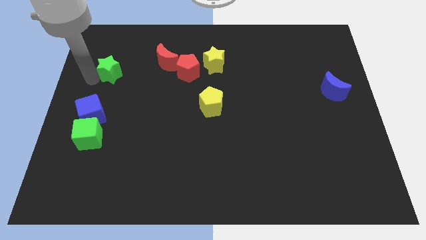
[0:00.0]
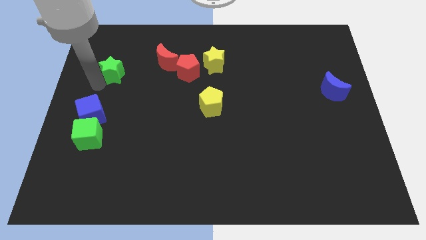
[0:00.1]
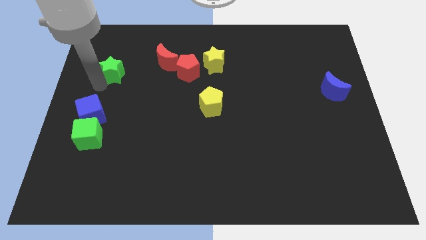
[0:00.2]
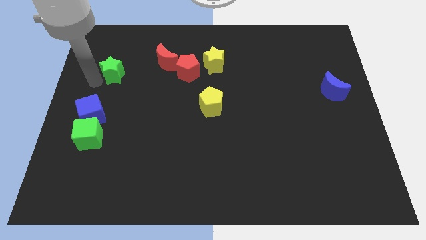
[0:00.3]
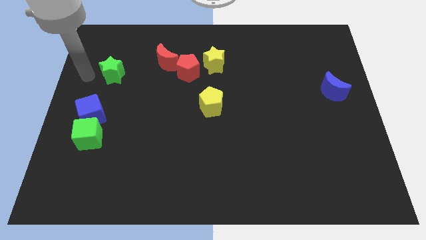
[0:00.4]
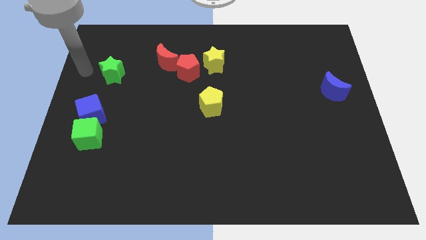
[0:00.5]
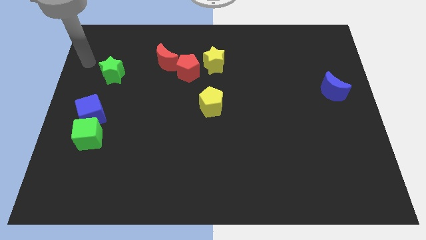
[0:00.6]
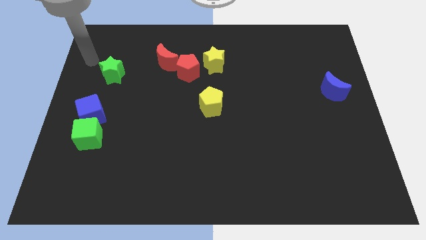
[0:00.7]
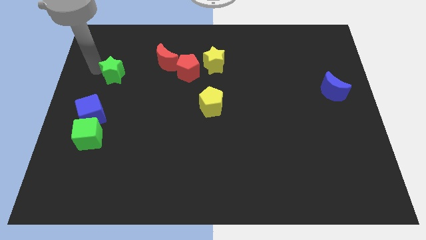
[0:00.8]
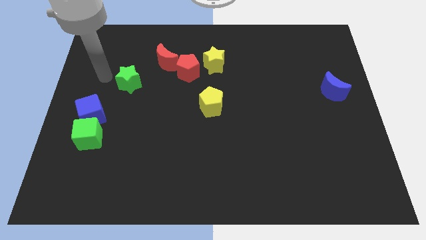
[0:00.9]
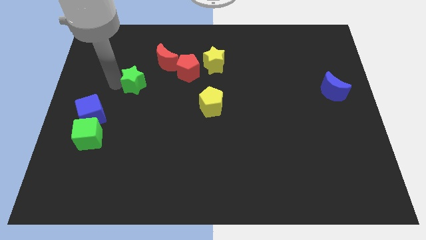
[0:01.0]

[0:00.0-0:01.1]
slide green star slightly to the right

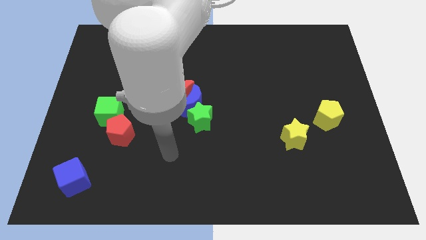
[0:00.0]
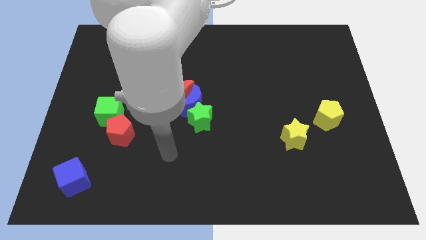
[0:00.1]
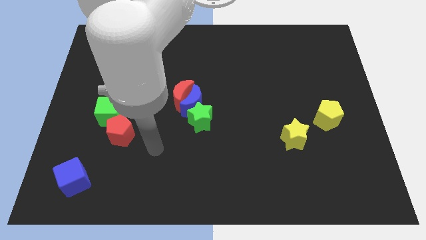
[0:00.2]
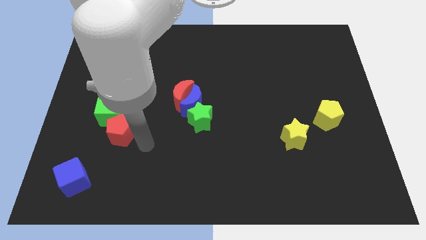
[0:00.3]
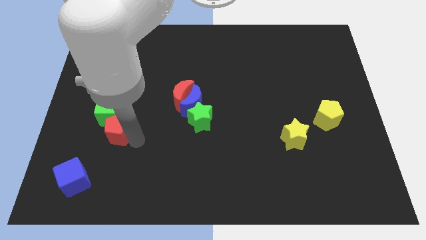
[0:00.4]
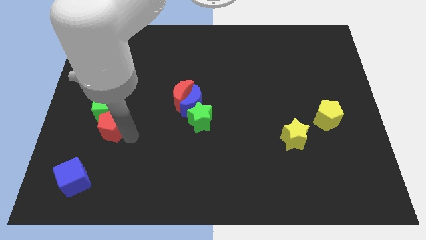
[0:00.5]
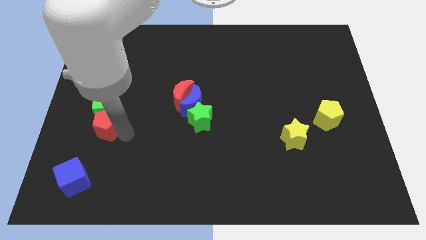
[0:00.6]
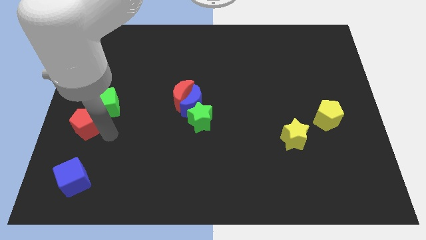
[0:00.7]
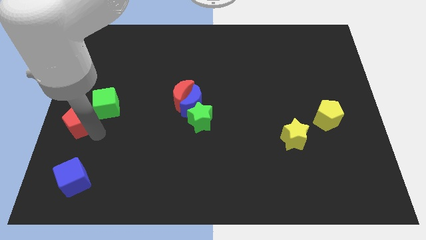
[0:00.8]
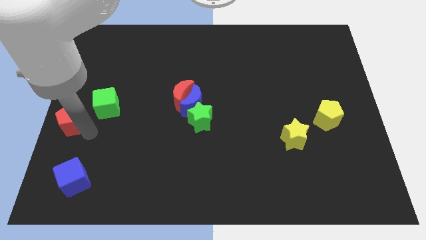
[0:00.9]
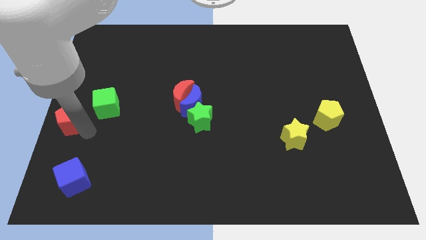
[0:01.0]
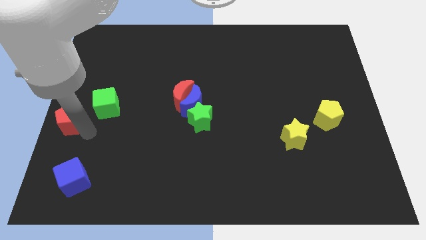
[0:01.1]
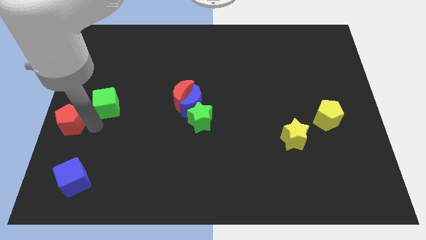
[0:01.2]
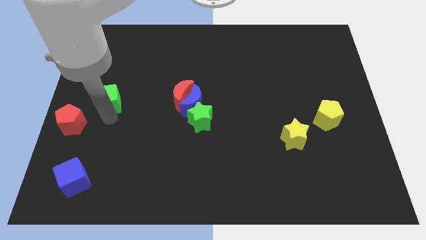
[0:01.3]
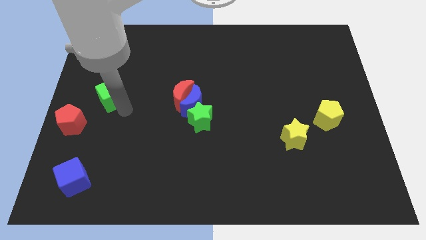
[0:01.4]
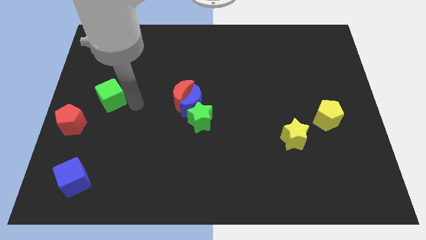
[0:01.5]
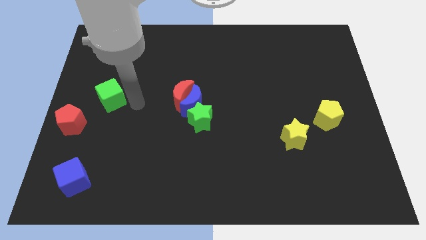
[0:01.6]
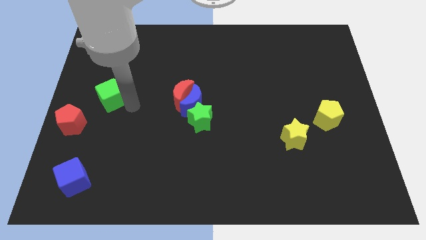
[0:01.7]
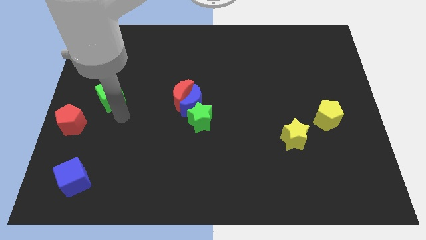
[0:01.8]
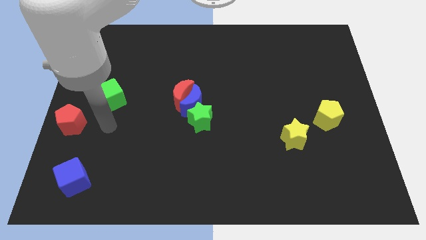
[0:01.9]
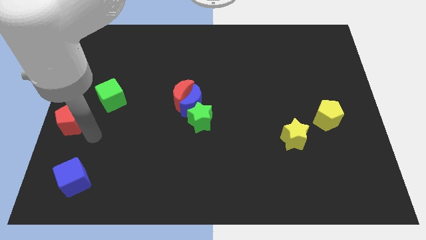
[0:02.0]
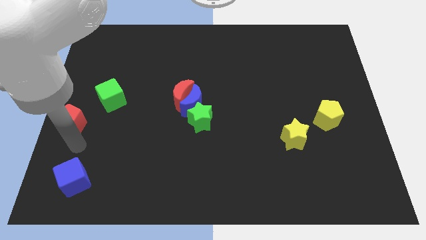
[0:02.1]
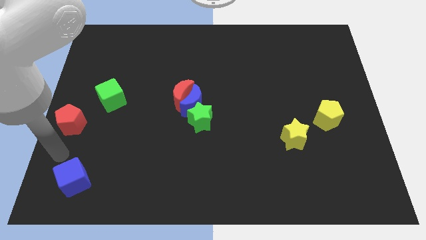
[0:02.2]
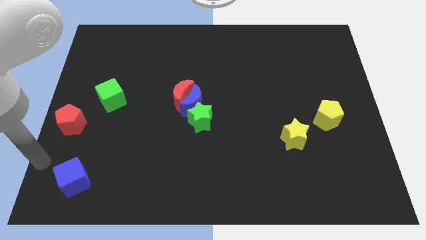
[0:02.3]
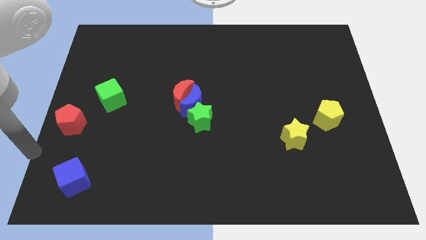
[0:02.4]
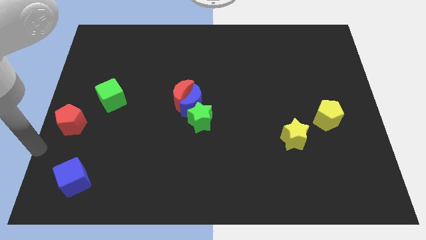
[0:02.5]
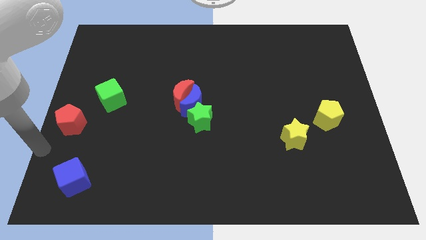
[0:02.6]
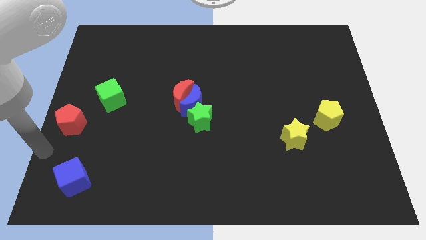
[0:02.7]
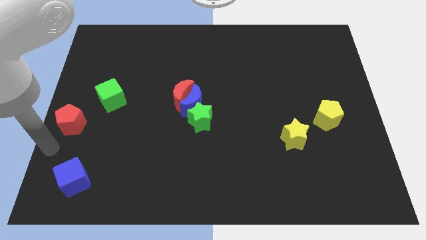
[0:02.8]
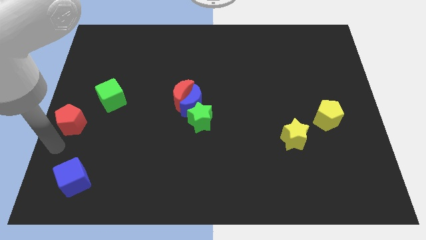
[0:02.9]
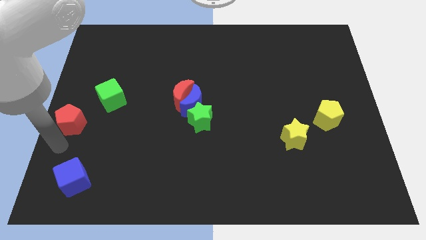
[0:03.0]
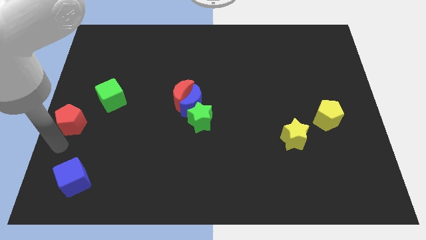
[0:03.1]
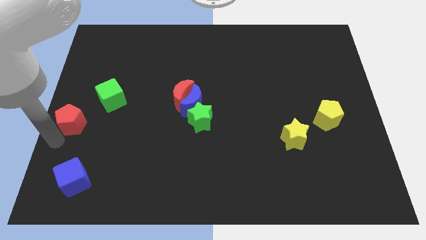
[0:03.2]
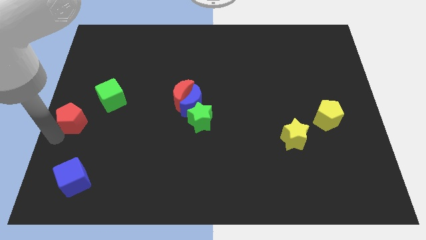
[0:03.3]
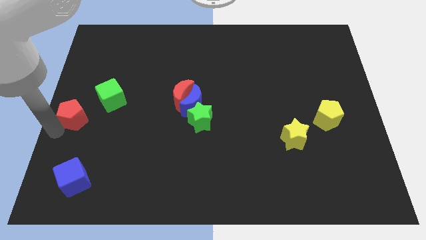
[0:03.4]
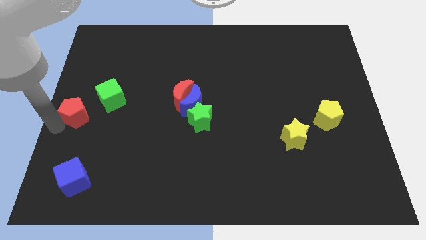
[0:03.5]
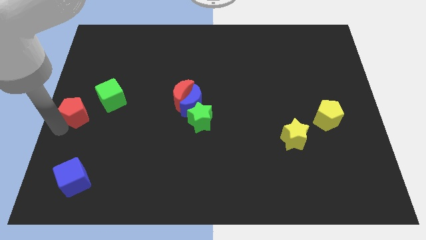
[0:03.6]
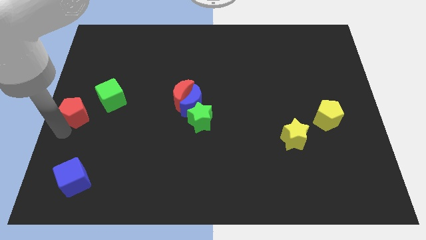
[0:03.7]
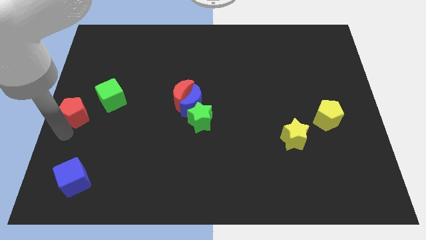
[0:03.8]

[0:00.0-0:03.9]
push the red pentagon towards the left center of the board

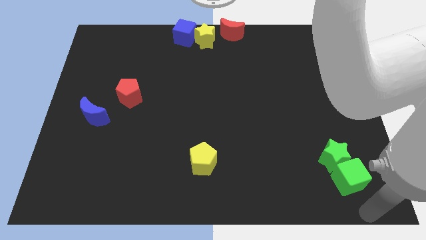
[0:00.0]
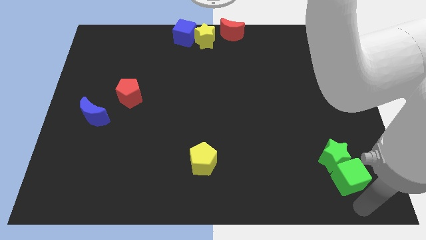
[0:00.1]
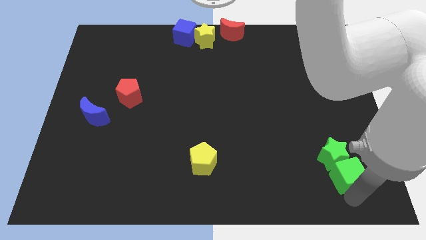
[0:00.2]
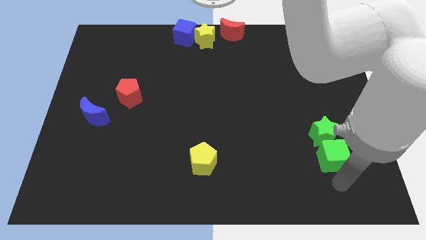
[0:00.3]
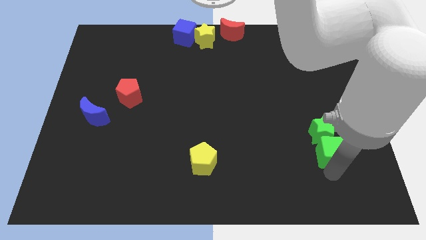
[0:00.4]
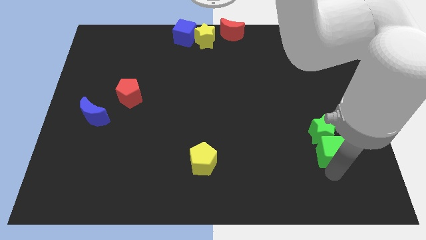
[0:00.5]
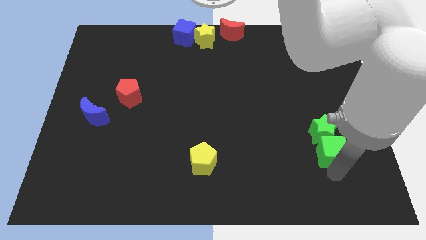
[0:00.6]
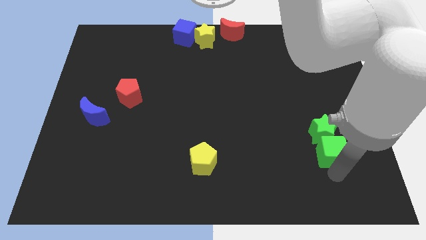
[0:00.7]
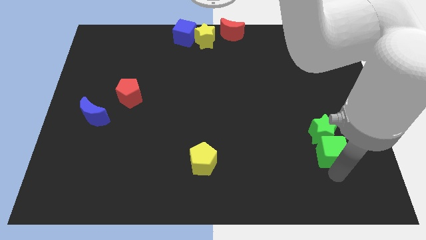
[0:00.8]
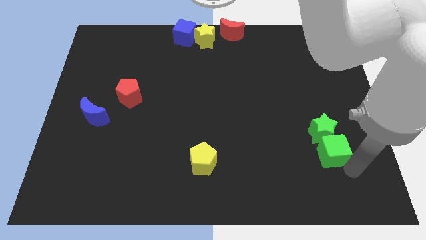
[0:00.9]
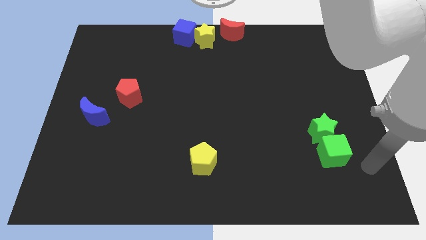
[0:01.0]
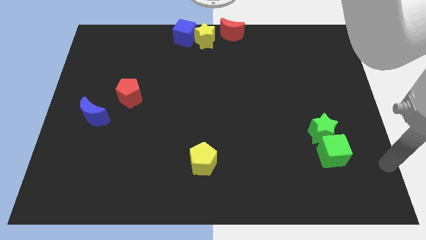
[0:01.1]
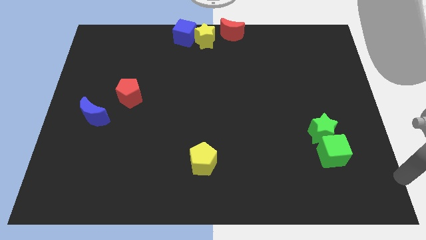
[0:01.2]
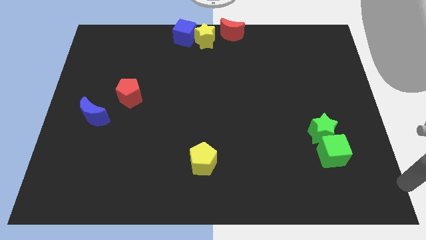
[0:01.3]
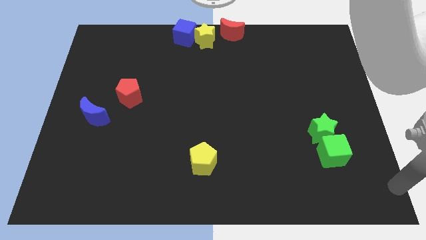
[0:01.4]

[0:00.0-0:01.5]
push green block along with green star towards the top of the board

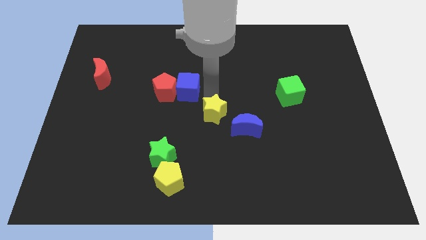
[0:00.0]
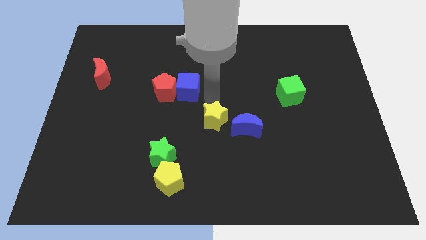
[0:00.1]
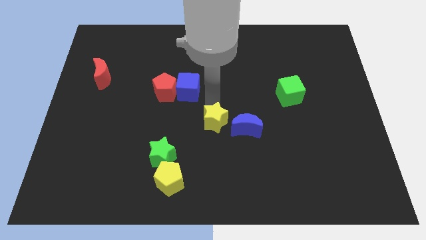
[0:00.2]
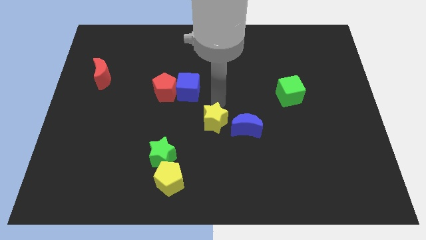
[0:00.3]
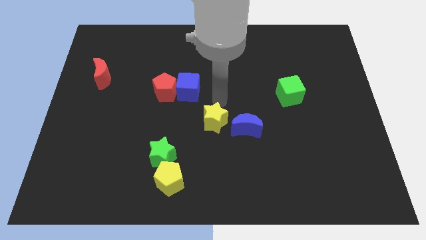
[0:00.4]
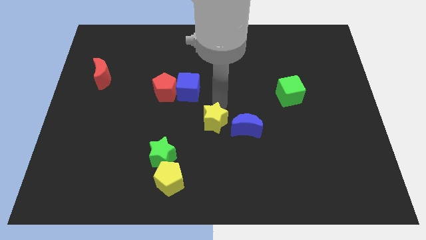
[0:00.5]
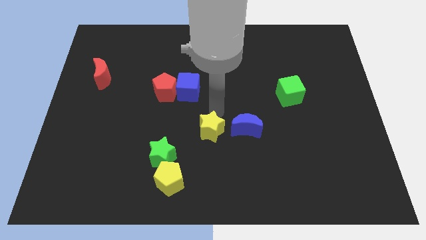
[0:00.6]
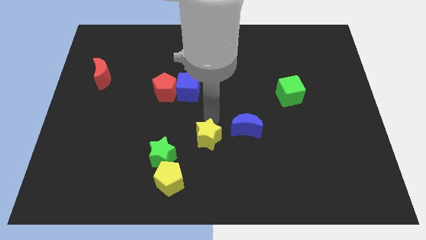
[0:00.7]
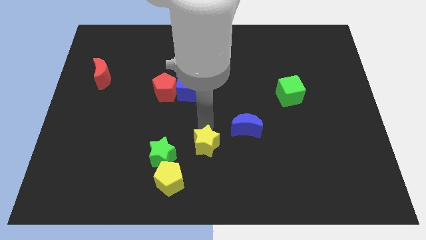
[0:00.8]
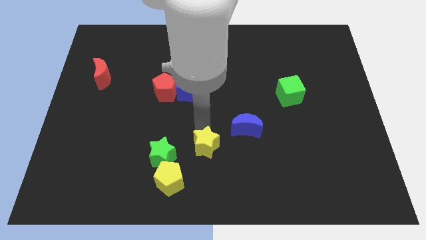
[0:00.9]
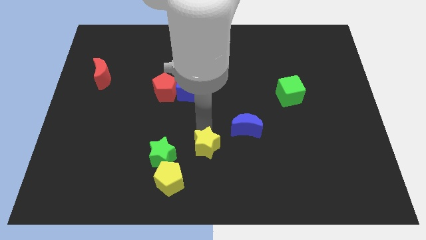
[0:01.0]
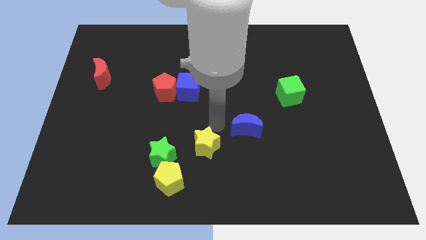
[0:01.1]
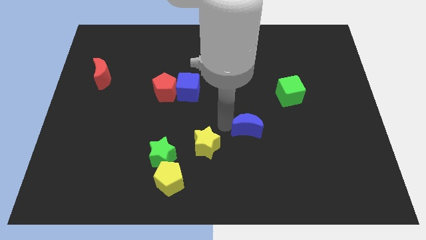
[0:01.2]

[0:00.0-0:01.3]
move the yellow star slightly to the bottom

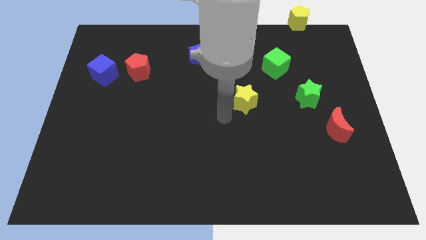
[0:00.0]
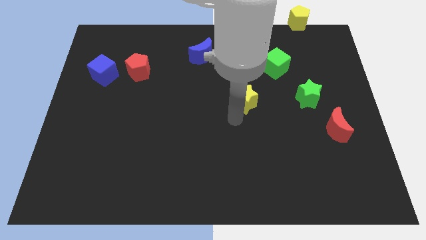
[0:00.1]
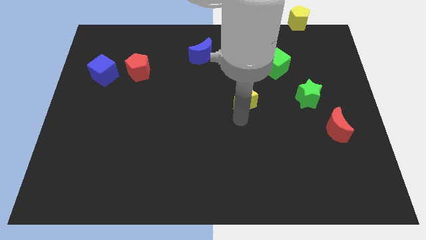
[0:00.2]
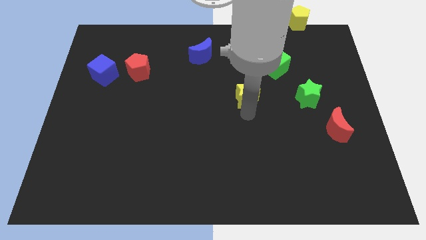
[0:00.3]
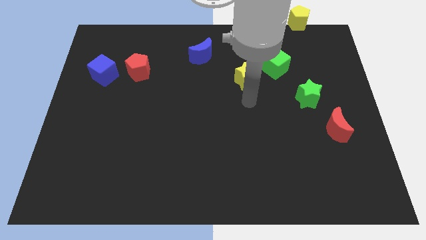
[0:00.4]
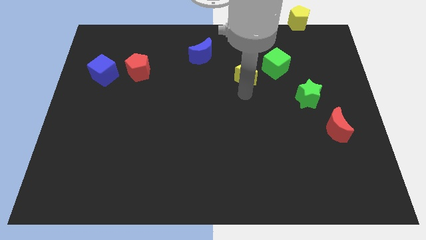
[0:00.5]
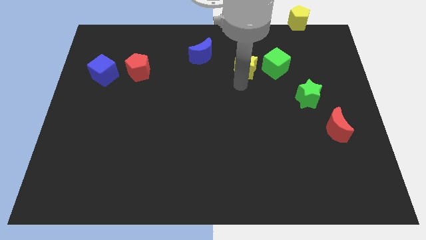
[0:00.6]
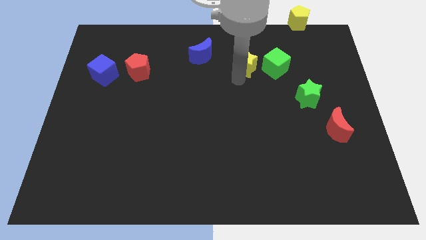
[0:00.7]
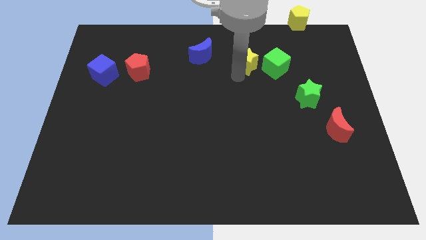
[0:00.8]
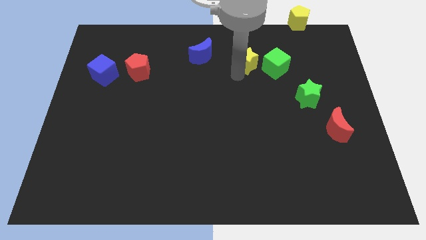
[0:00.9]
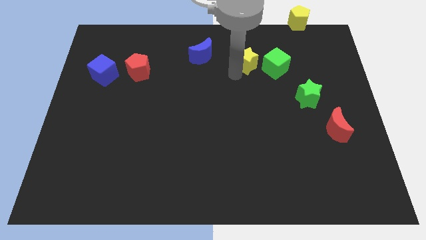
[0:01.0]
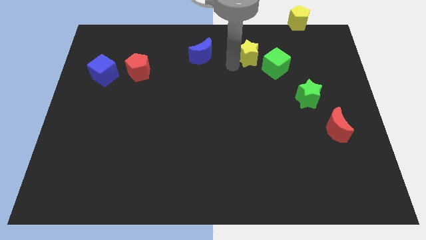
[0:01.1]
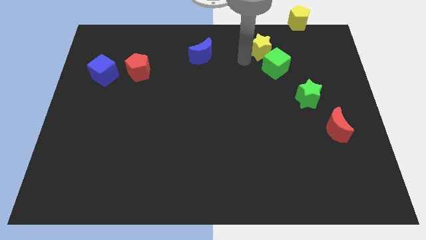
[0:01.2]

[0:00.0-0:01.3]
move the yellow star to the top center of the board
